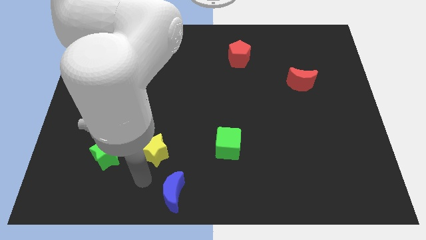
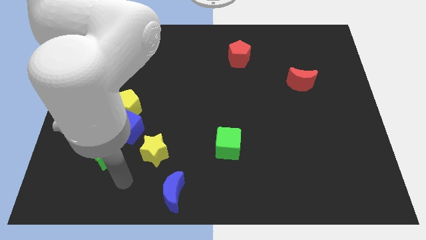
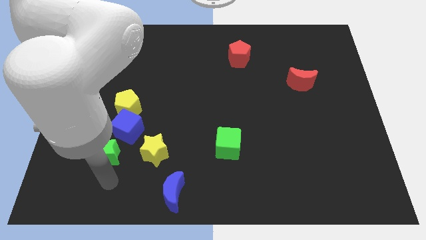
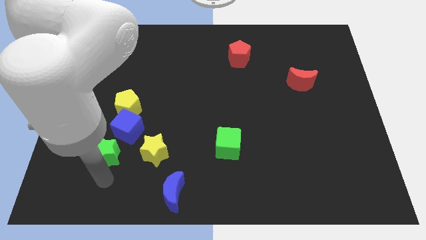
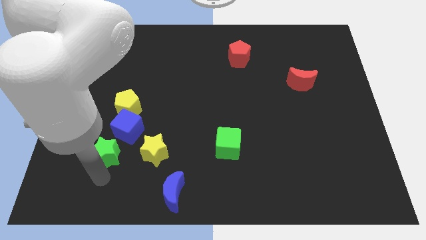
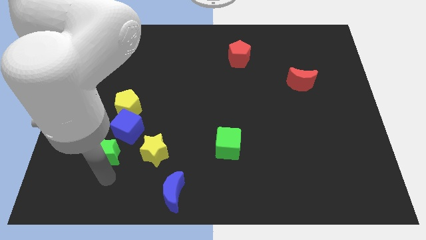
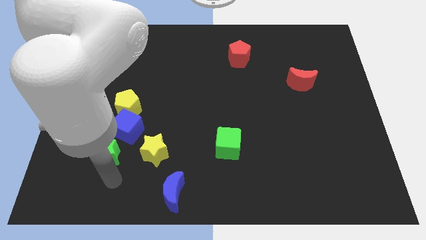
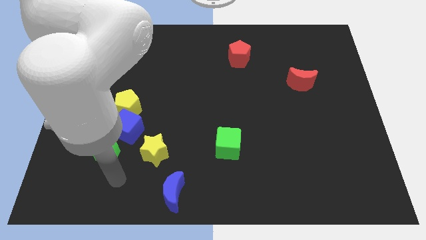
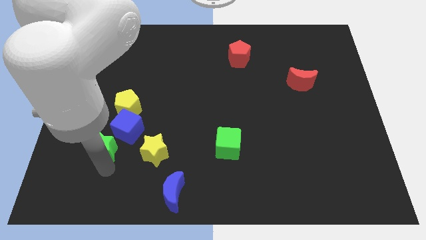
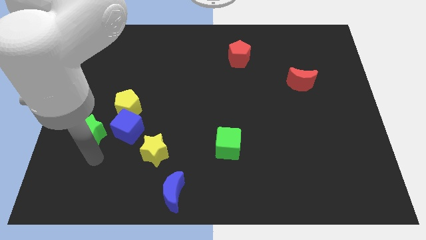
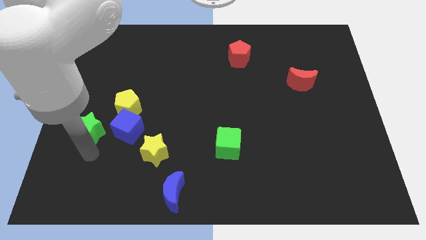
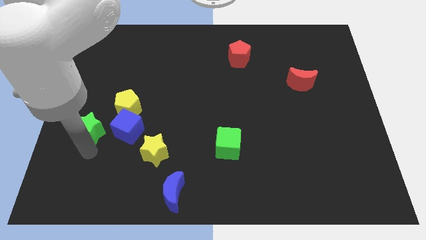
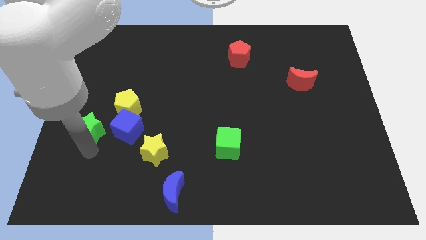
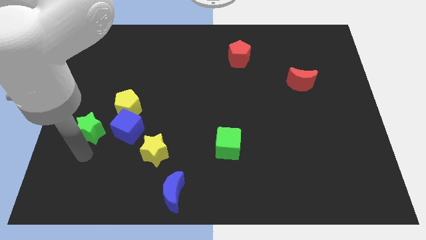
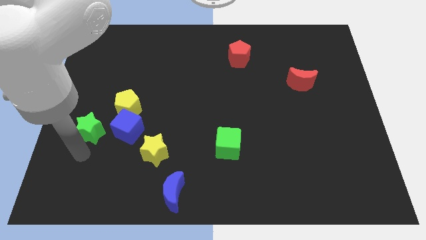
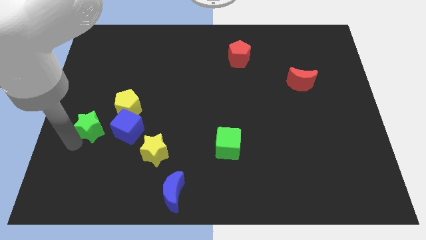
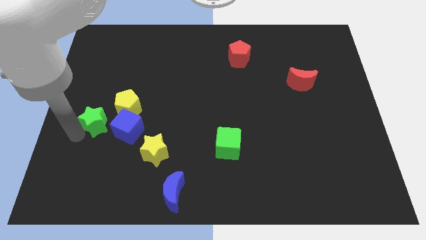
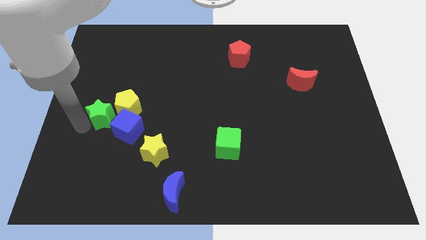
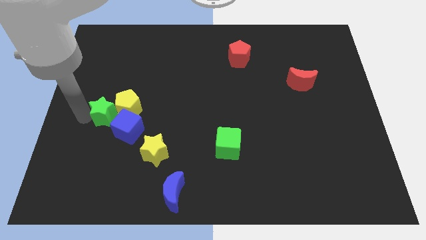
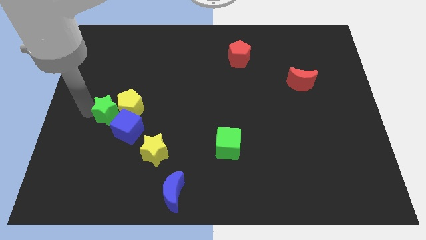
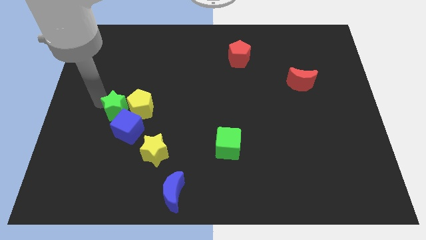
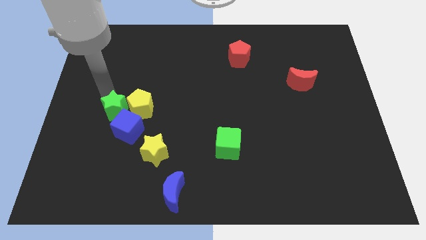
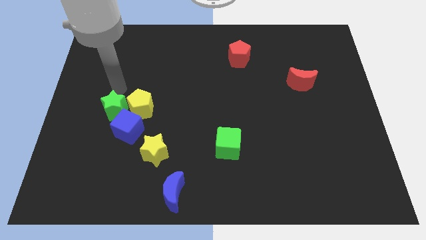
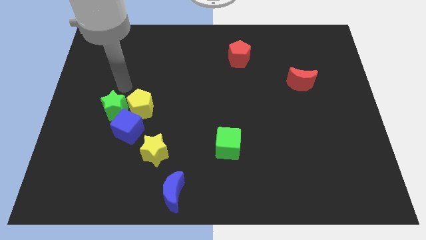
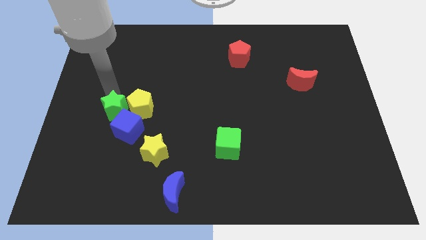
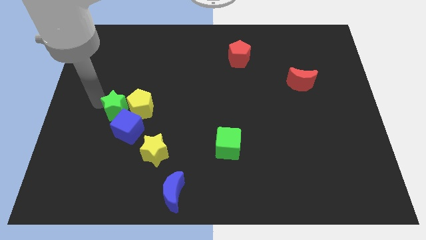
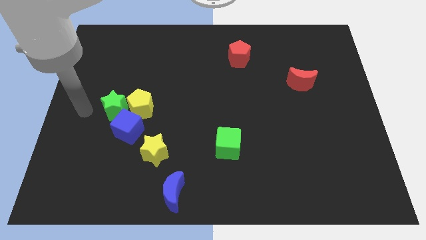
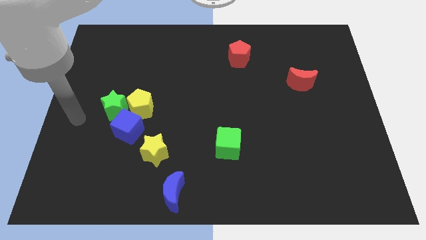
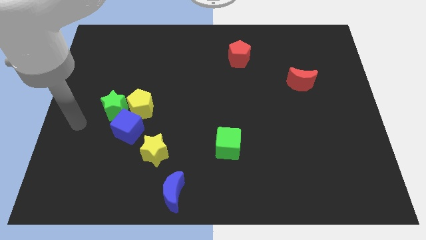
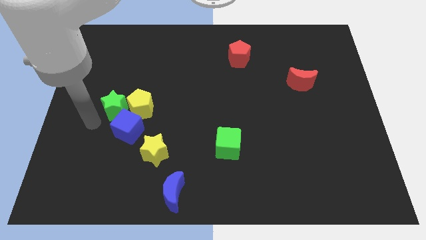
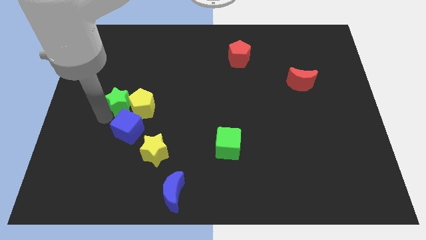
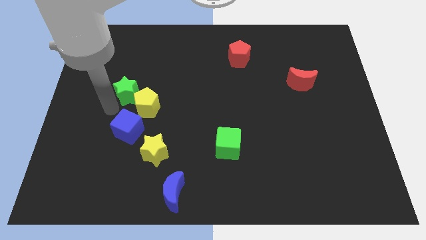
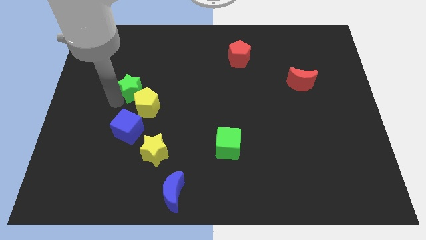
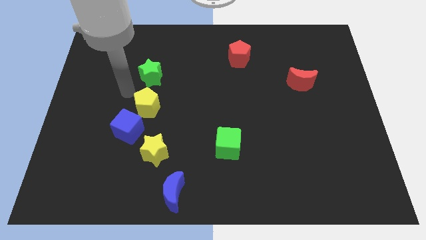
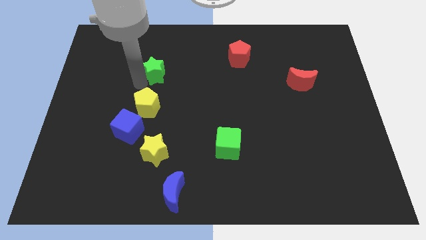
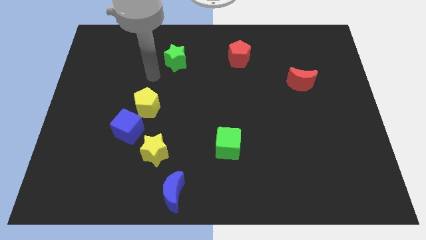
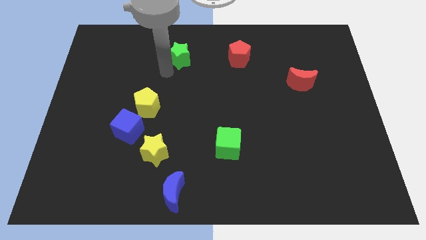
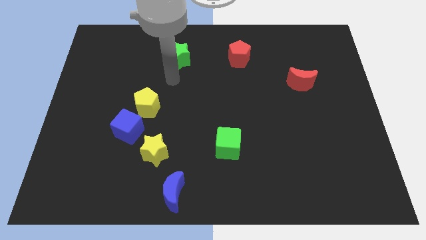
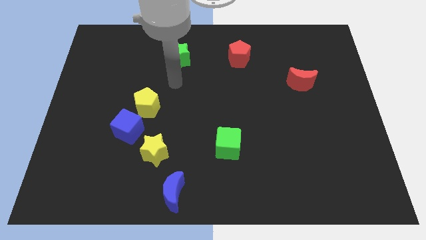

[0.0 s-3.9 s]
move the green star towards the top center

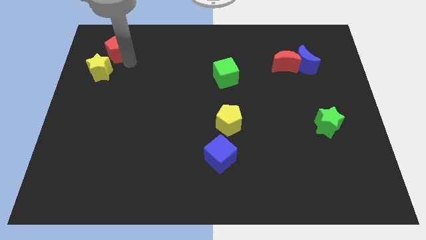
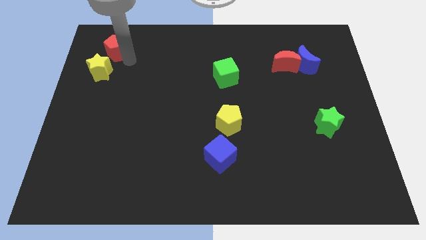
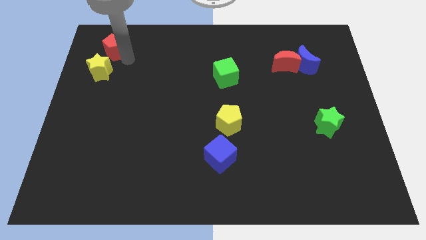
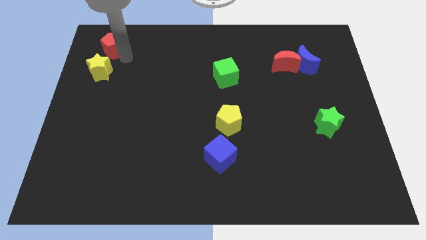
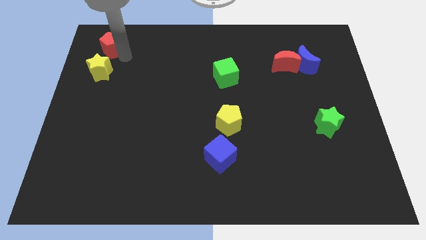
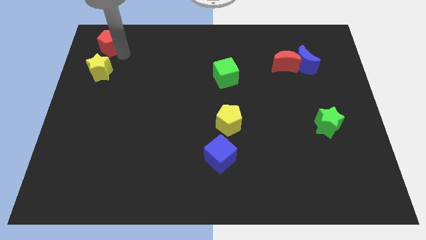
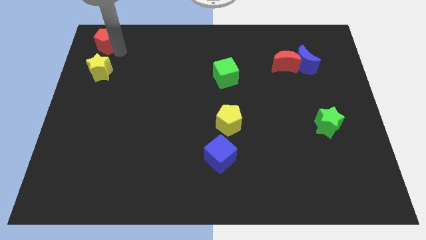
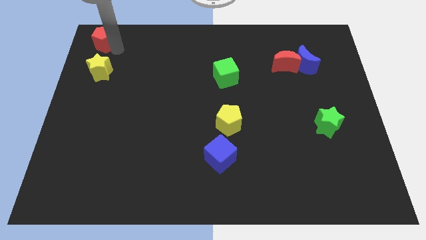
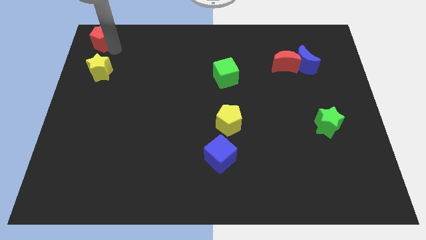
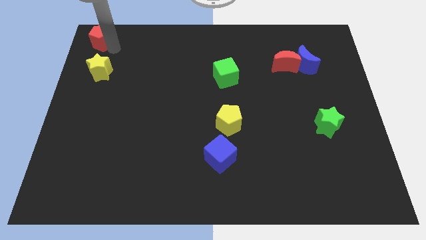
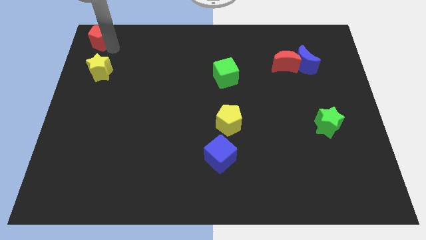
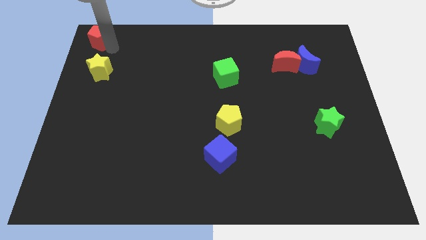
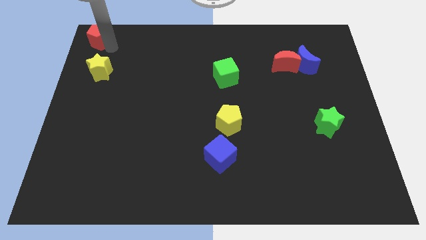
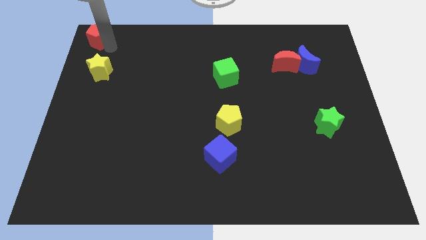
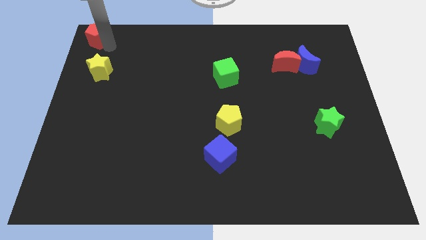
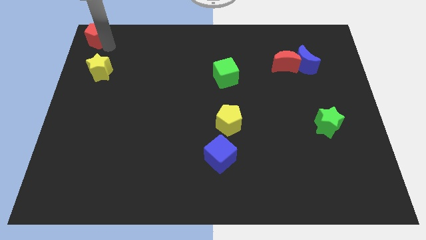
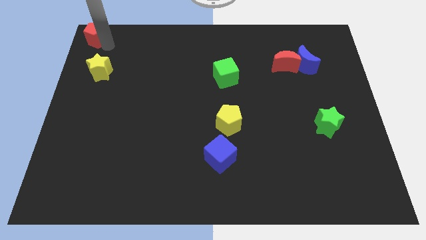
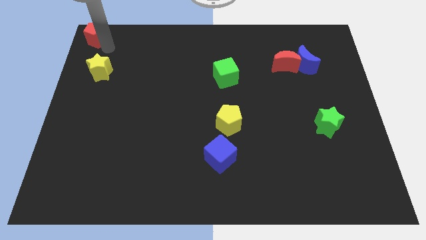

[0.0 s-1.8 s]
push the red pentagon to the top left

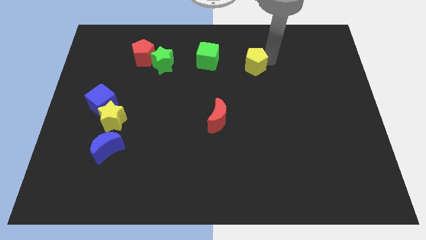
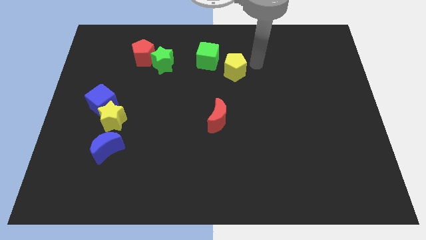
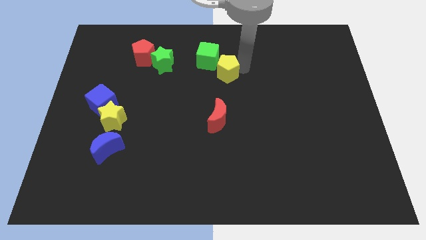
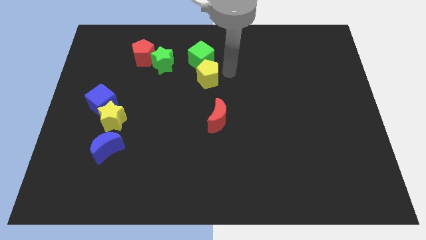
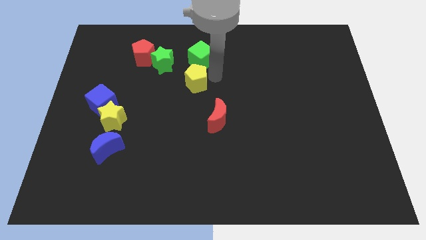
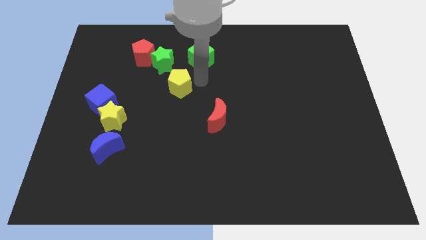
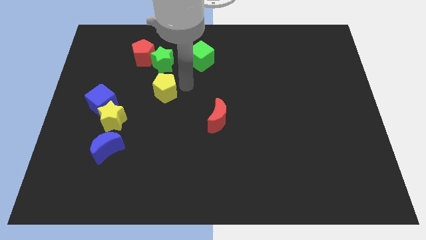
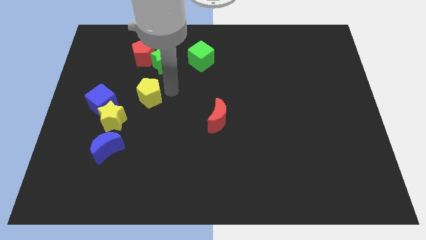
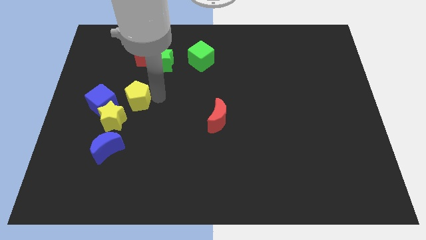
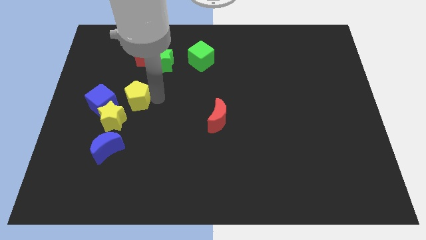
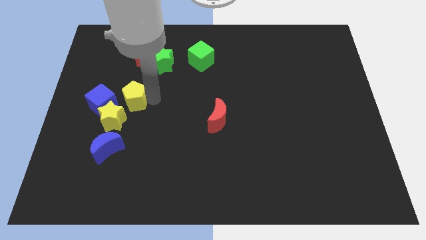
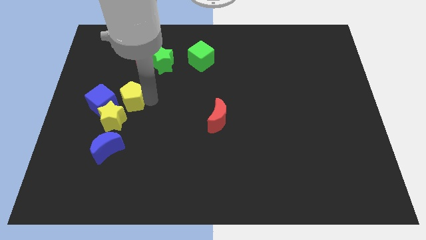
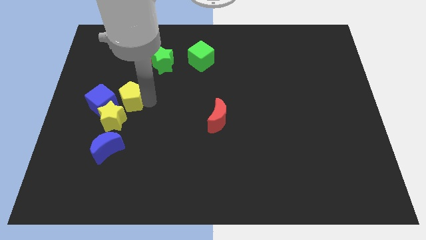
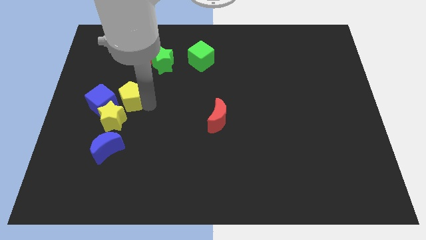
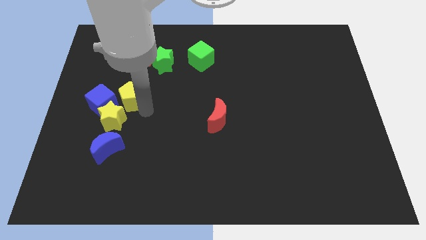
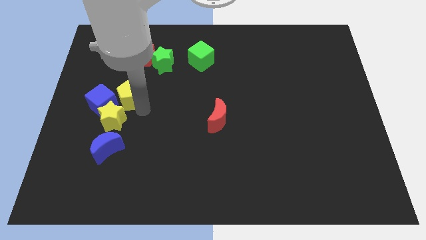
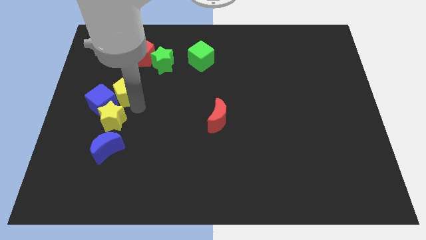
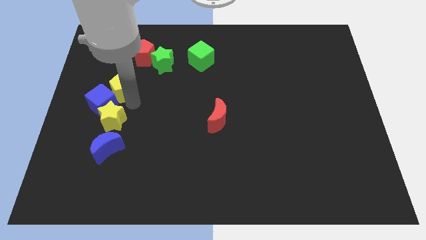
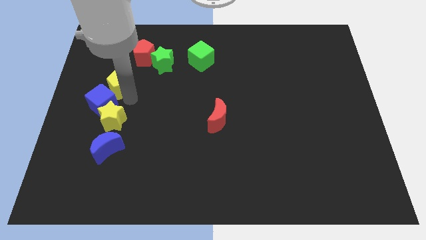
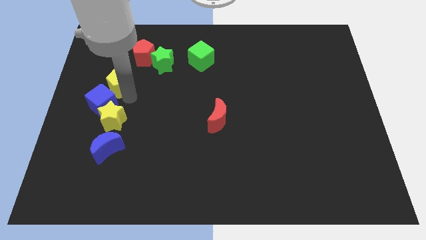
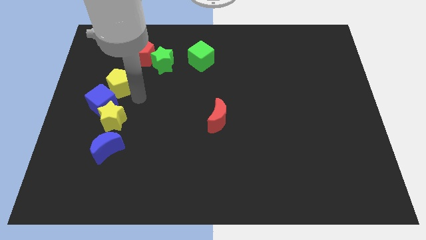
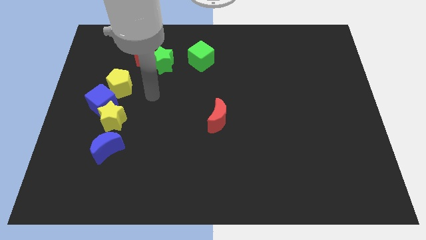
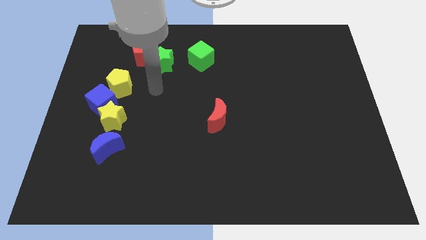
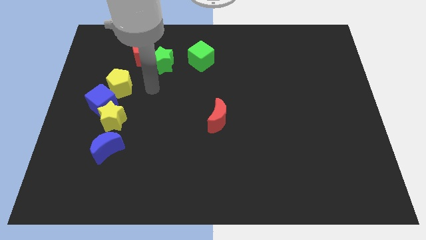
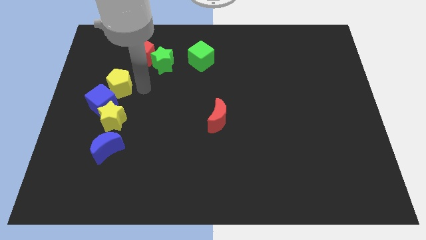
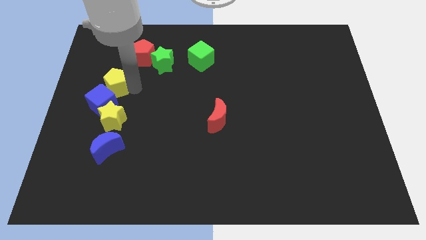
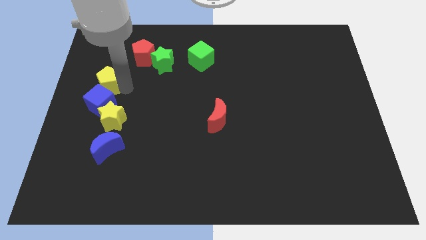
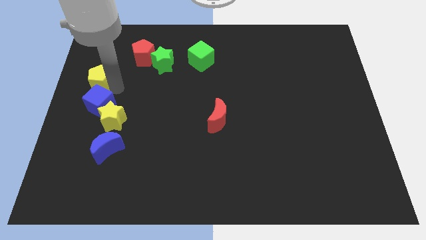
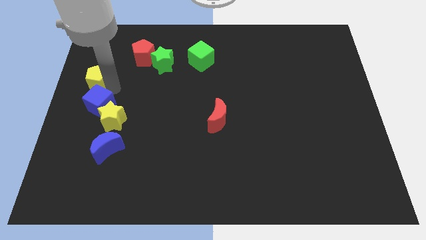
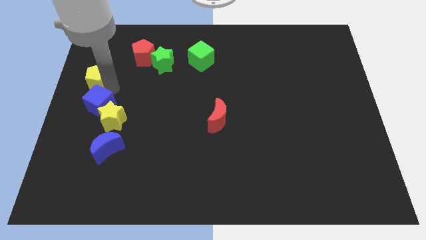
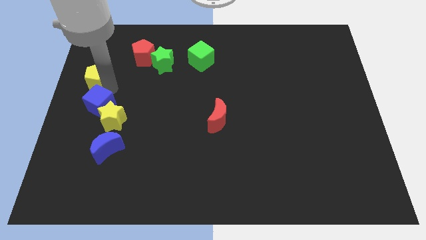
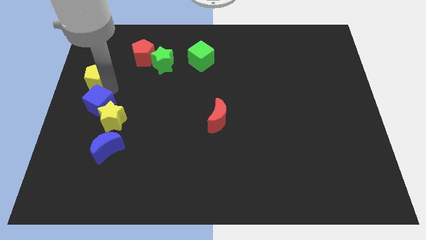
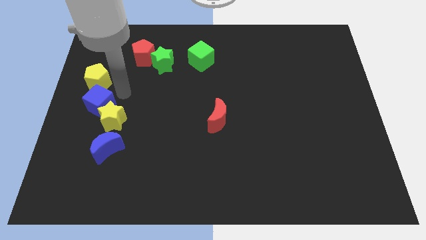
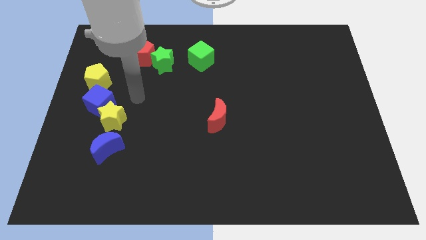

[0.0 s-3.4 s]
place the yellow pentagon at the top side of the blue cube
